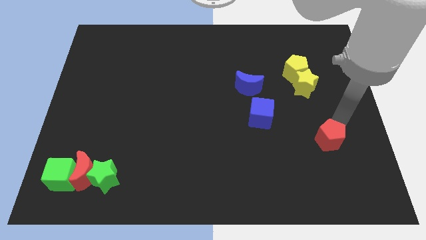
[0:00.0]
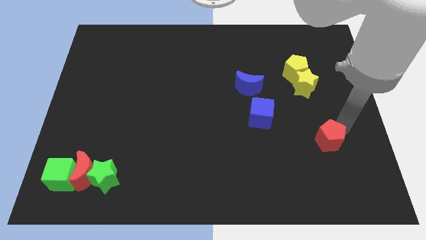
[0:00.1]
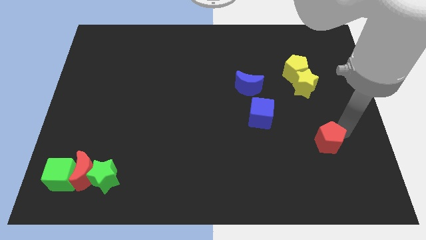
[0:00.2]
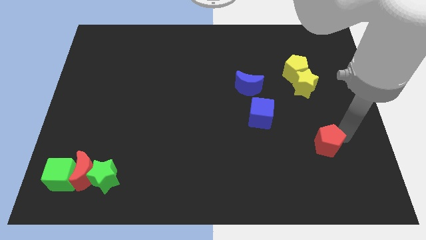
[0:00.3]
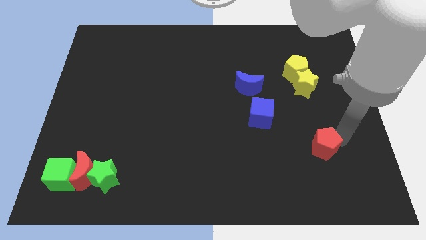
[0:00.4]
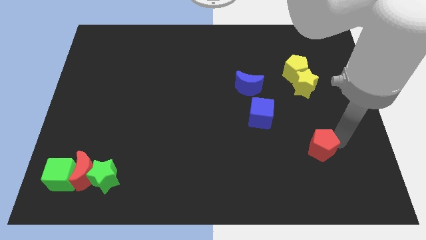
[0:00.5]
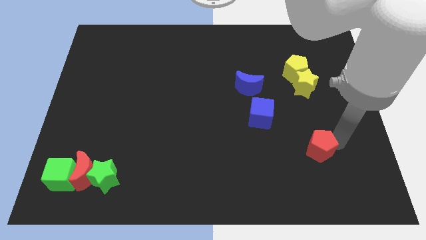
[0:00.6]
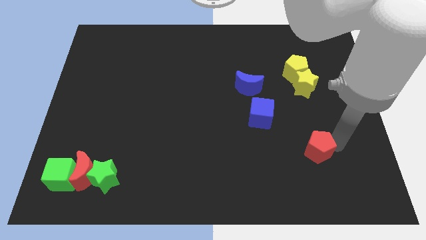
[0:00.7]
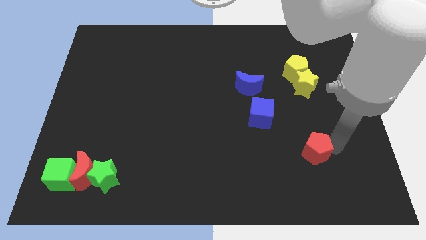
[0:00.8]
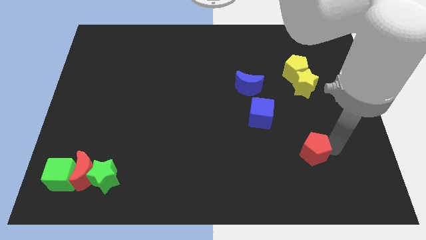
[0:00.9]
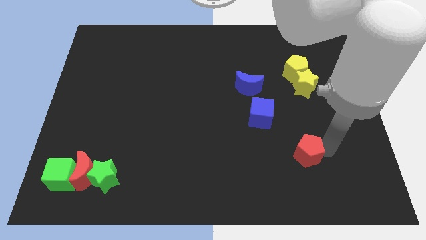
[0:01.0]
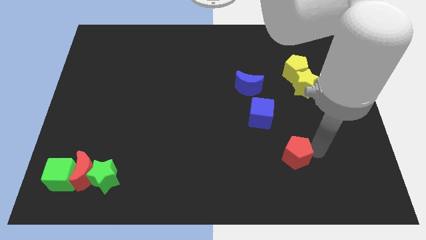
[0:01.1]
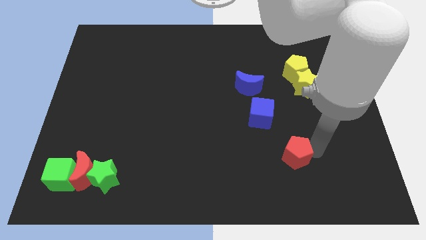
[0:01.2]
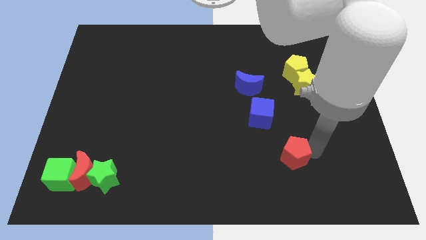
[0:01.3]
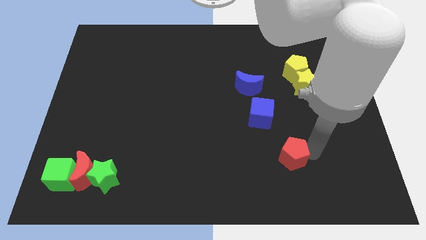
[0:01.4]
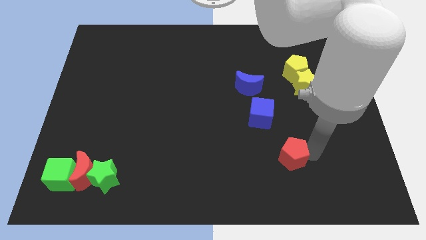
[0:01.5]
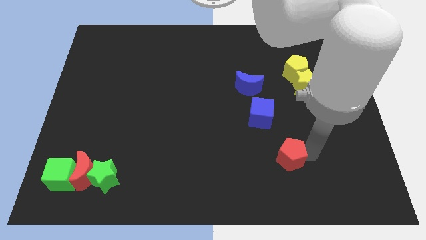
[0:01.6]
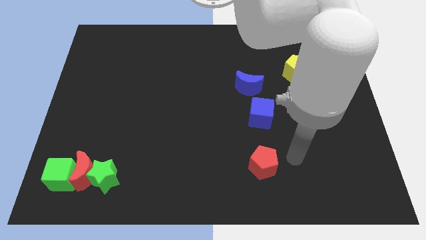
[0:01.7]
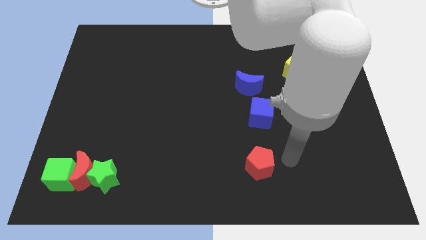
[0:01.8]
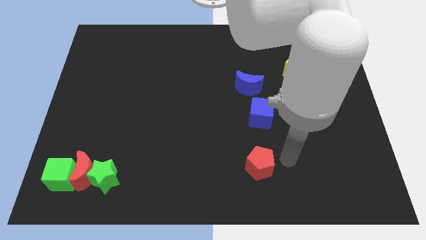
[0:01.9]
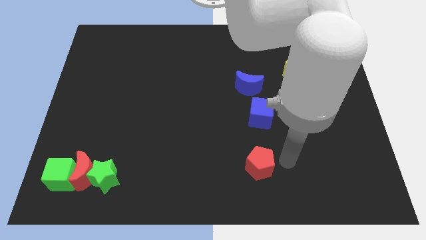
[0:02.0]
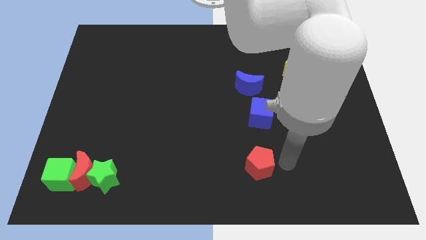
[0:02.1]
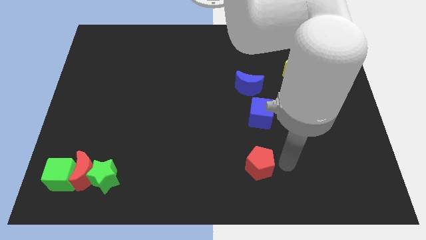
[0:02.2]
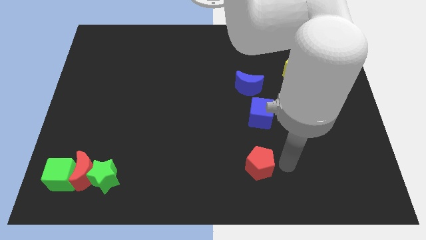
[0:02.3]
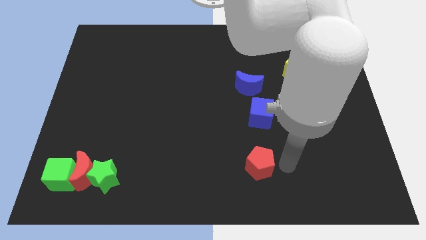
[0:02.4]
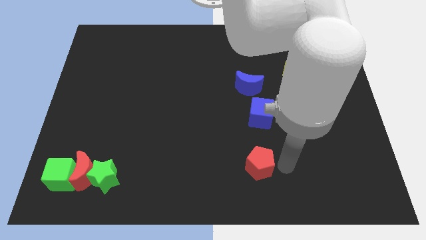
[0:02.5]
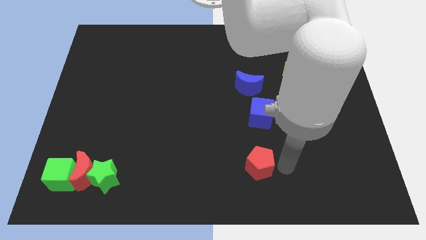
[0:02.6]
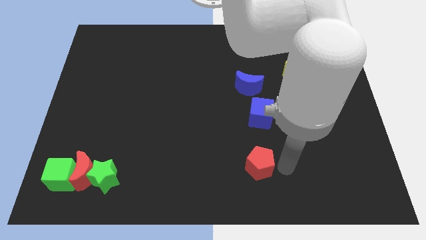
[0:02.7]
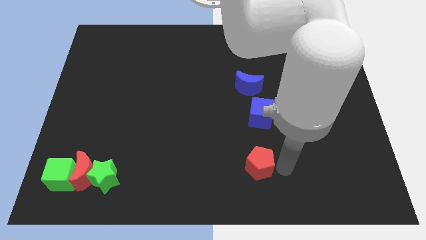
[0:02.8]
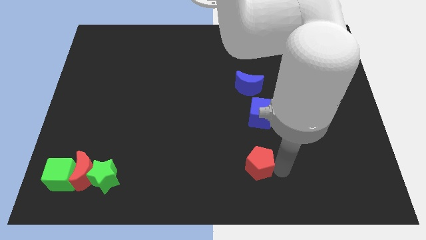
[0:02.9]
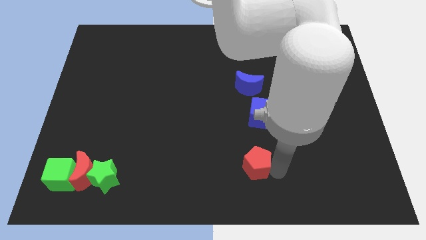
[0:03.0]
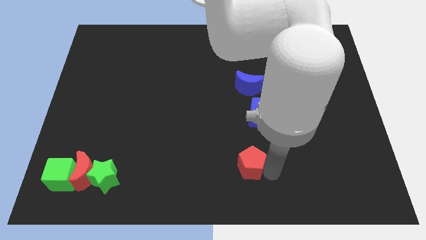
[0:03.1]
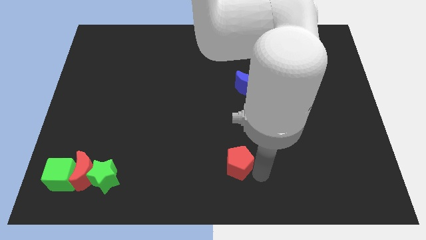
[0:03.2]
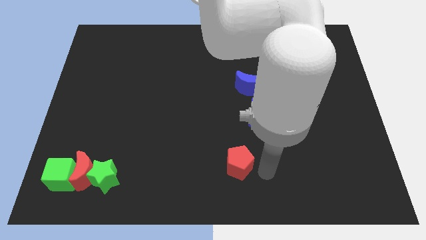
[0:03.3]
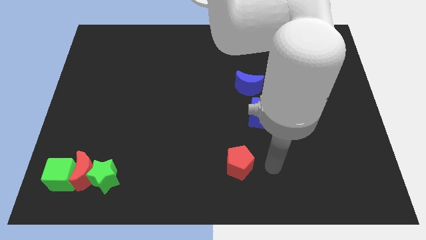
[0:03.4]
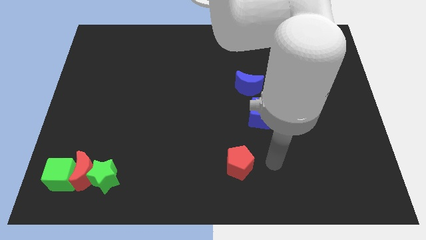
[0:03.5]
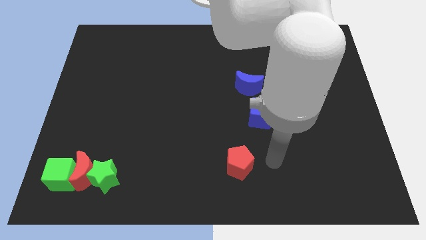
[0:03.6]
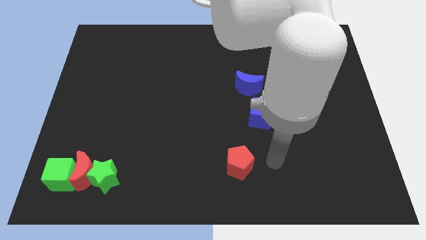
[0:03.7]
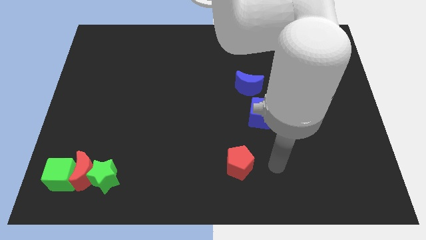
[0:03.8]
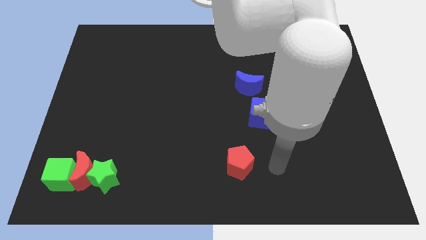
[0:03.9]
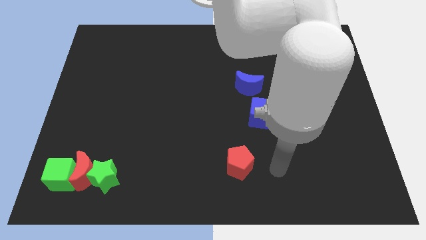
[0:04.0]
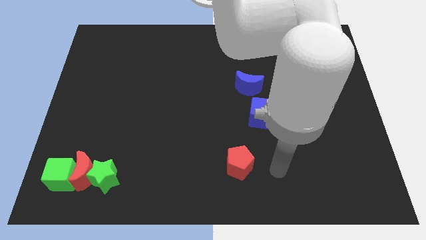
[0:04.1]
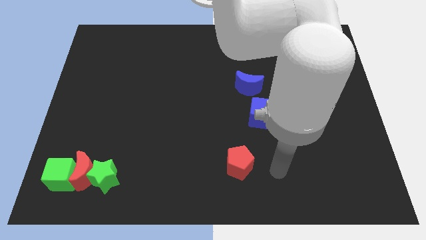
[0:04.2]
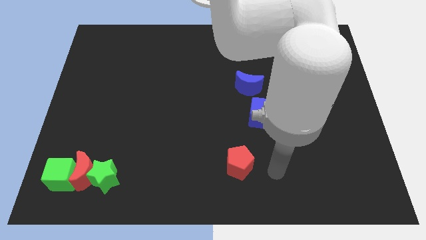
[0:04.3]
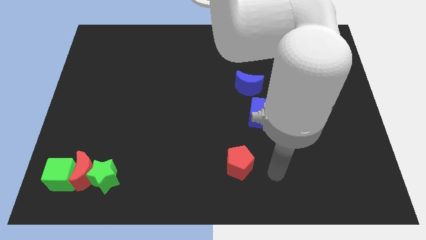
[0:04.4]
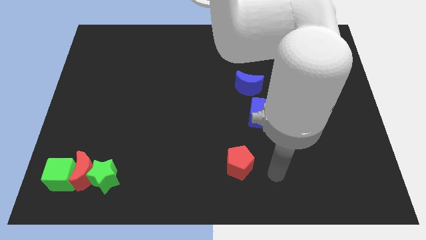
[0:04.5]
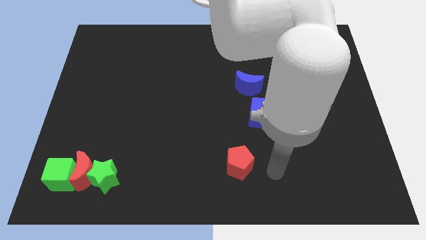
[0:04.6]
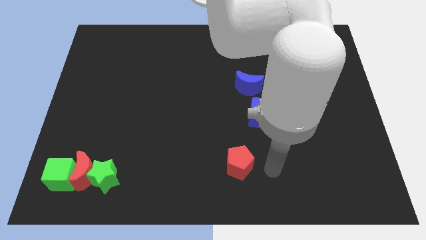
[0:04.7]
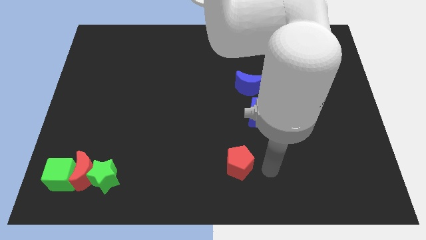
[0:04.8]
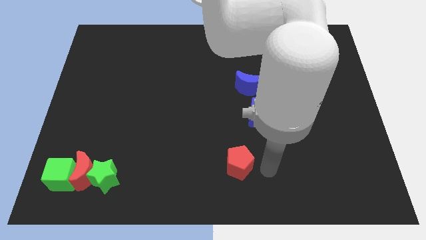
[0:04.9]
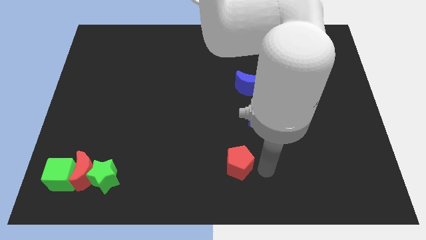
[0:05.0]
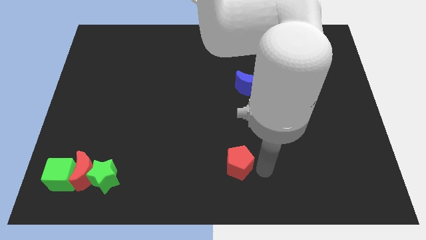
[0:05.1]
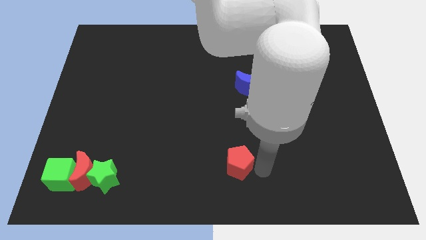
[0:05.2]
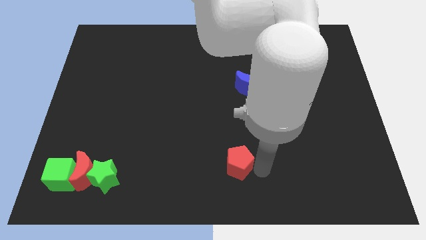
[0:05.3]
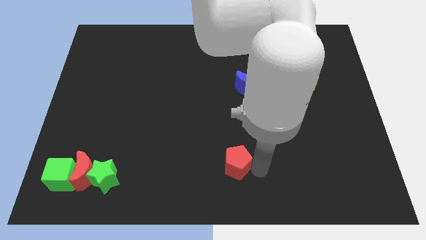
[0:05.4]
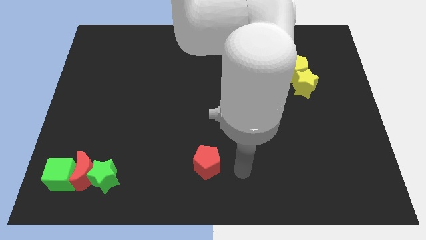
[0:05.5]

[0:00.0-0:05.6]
move red pentagon towards the bottom centre of the board

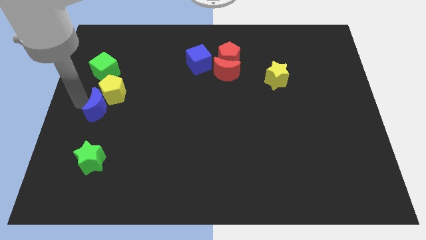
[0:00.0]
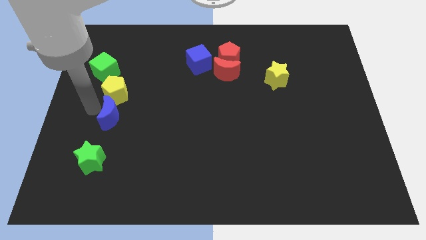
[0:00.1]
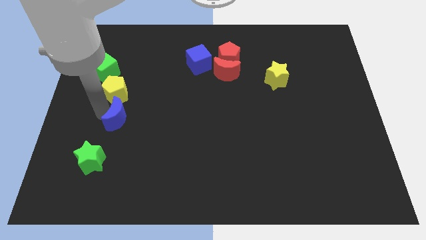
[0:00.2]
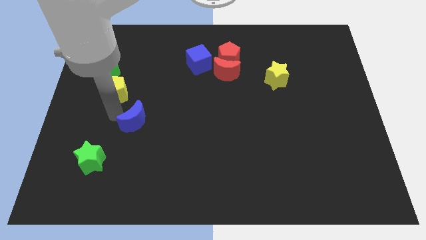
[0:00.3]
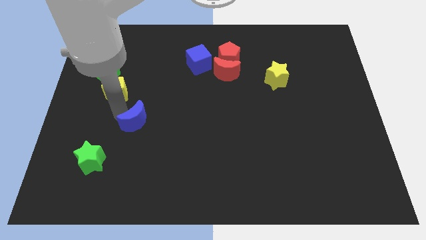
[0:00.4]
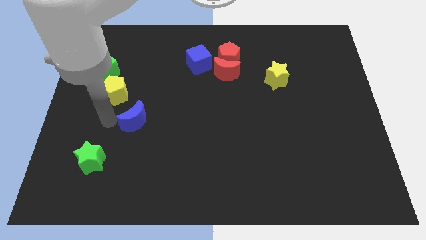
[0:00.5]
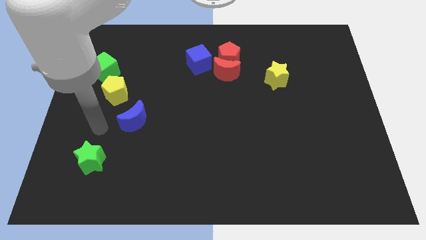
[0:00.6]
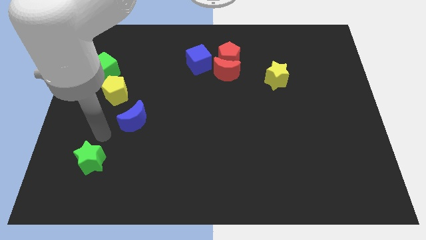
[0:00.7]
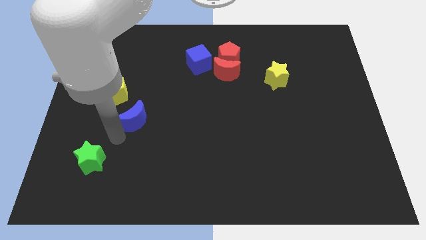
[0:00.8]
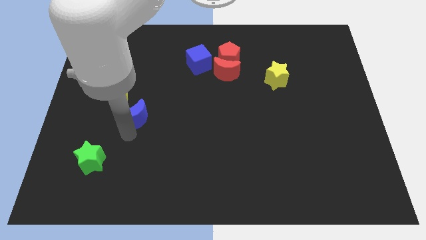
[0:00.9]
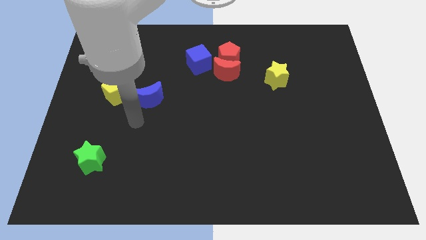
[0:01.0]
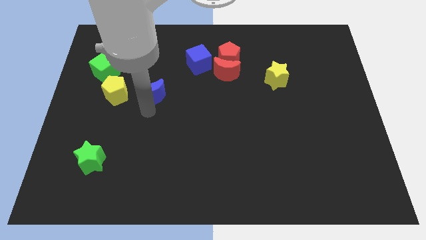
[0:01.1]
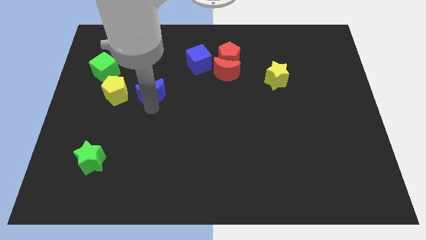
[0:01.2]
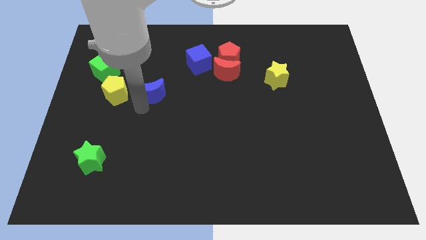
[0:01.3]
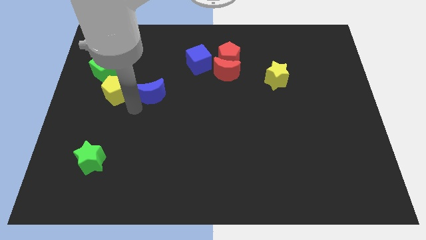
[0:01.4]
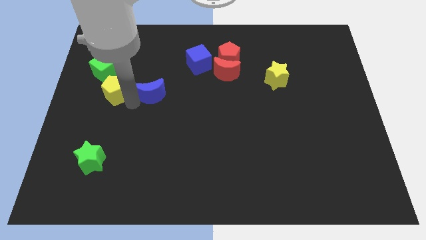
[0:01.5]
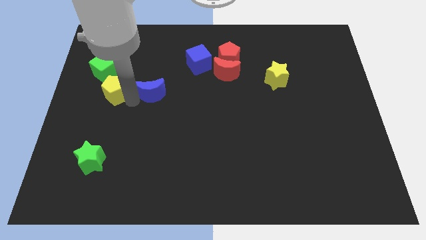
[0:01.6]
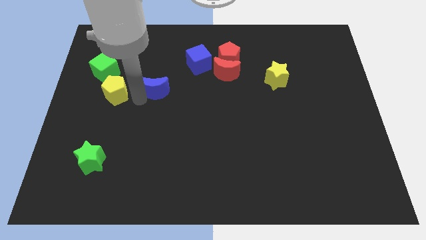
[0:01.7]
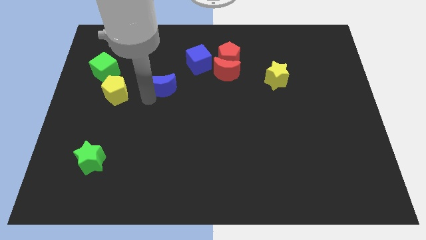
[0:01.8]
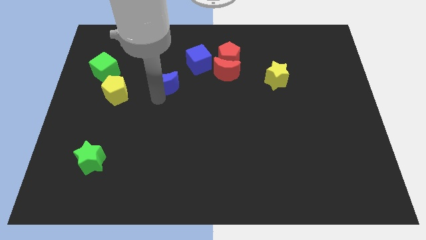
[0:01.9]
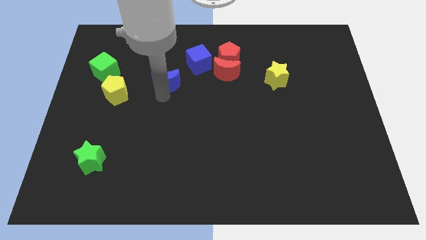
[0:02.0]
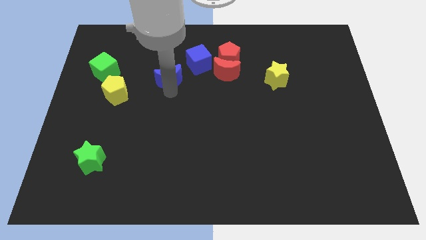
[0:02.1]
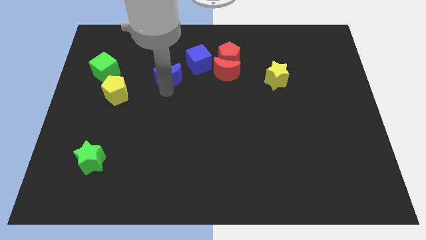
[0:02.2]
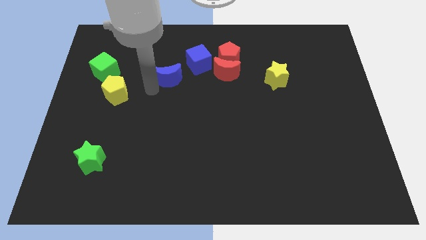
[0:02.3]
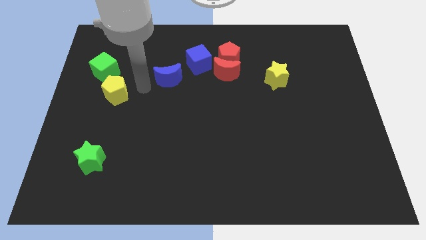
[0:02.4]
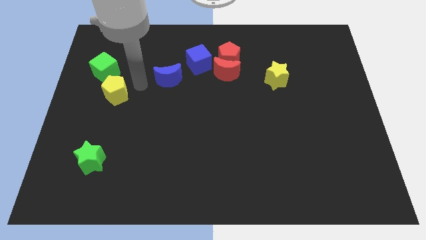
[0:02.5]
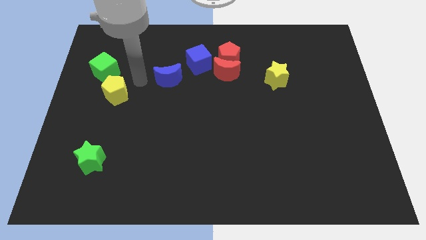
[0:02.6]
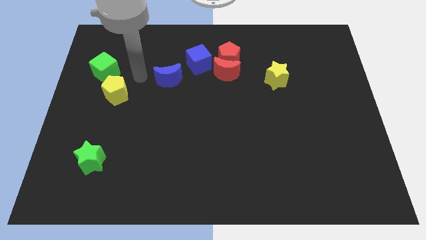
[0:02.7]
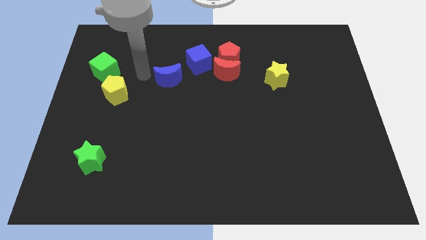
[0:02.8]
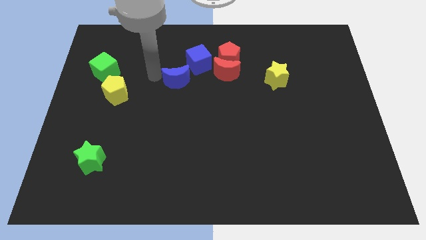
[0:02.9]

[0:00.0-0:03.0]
move the blue crescent towards the blue cube

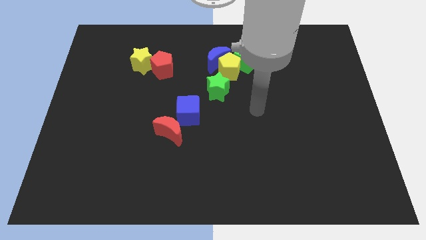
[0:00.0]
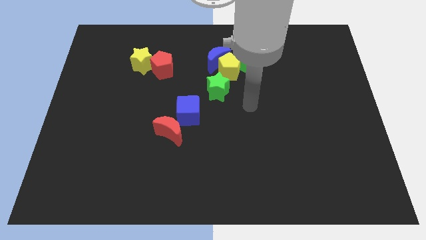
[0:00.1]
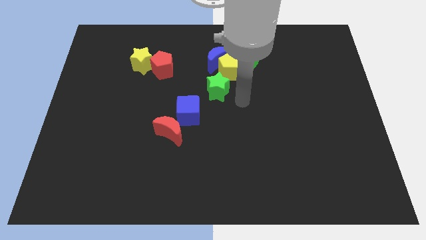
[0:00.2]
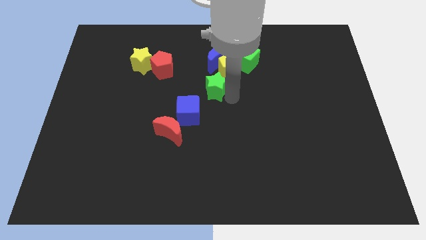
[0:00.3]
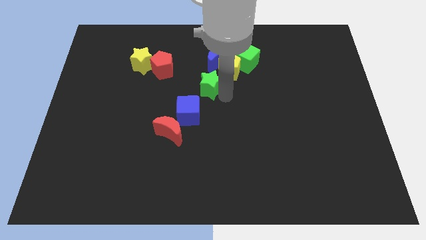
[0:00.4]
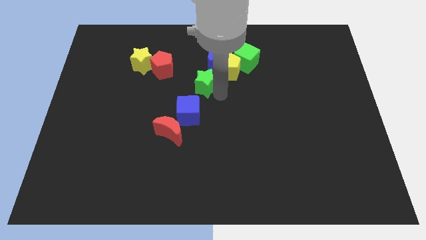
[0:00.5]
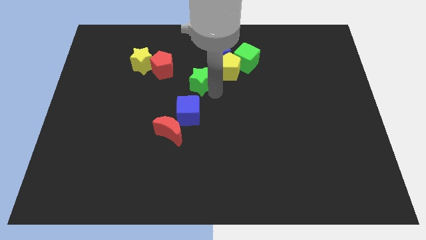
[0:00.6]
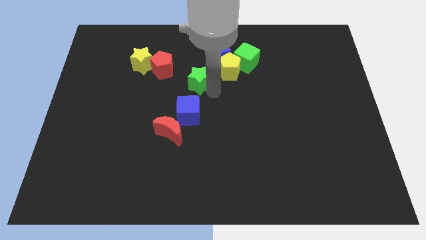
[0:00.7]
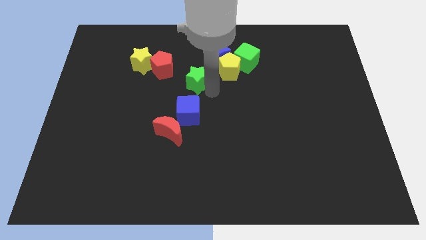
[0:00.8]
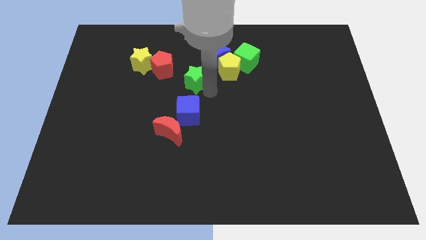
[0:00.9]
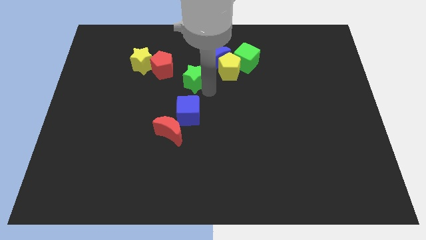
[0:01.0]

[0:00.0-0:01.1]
push the green star to the top of the blue cube
